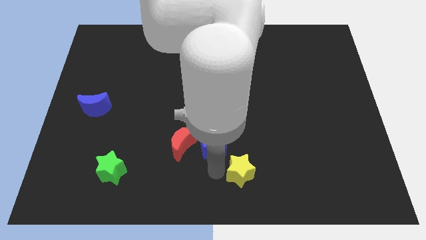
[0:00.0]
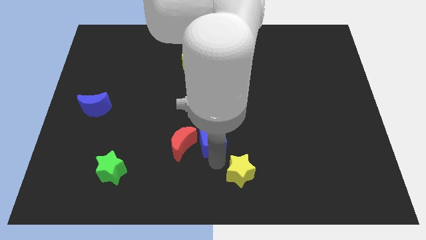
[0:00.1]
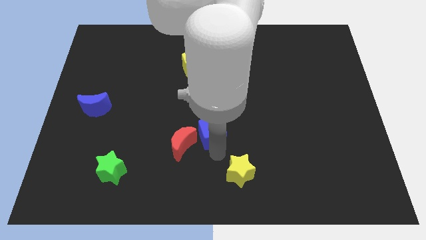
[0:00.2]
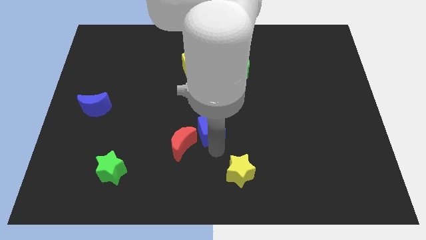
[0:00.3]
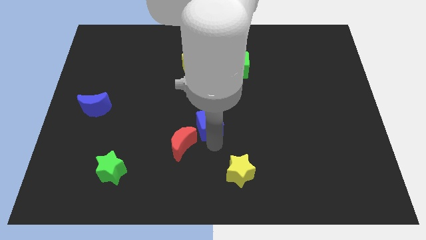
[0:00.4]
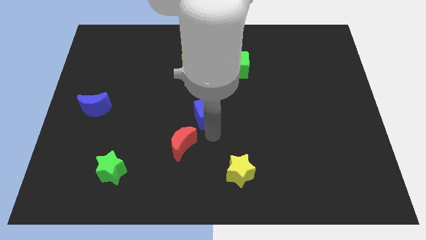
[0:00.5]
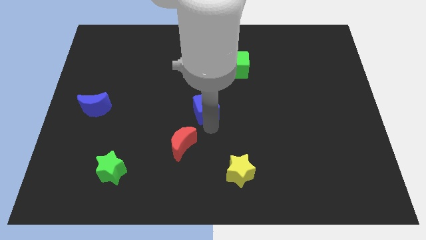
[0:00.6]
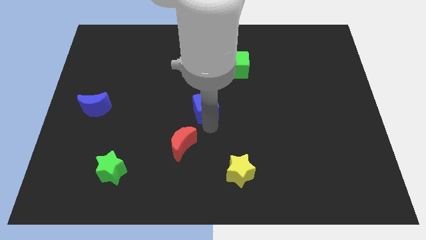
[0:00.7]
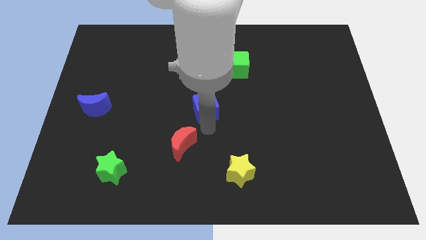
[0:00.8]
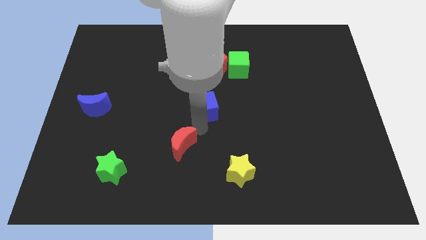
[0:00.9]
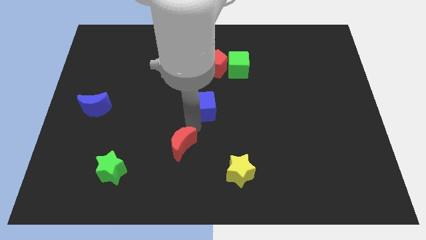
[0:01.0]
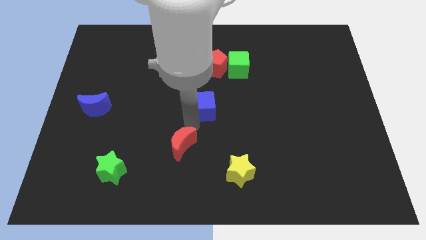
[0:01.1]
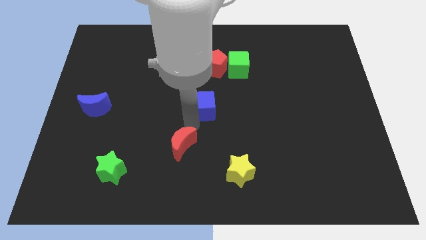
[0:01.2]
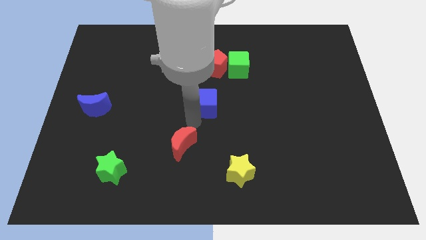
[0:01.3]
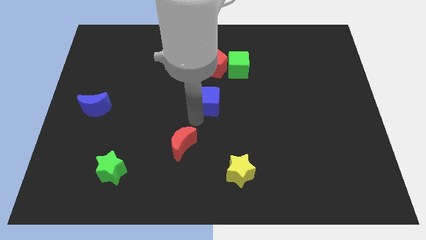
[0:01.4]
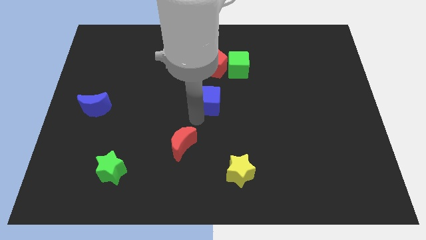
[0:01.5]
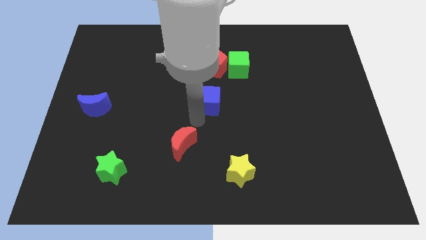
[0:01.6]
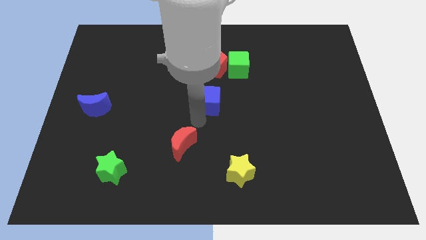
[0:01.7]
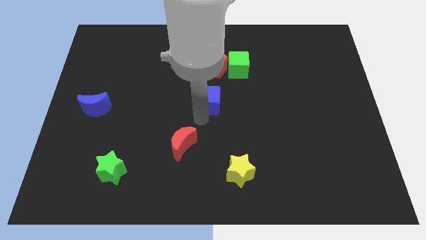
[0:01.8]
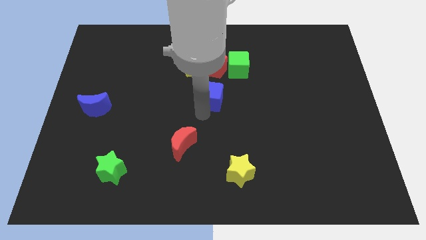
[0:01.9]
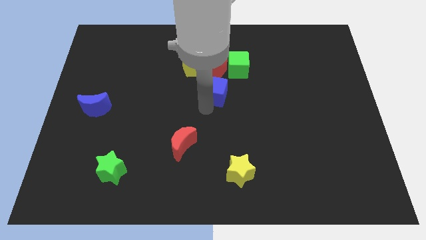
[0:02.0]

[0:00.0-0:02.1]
put the blue cube diagonally in between the green cube and red crescent

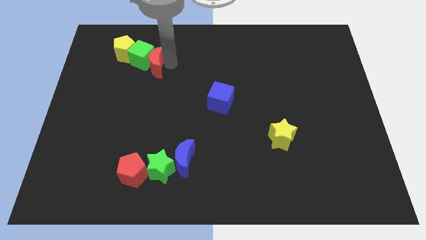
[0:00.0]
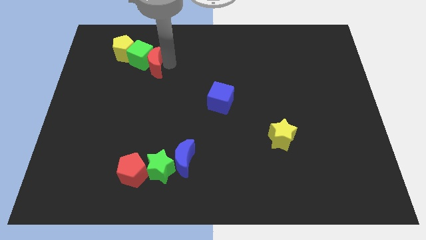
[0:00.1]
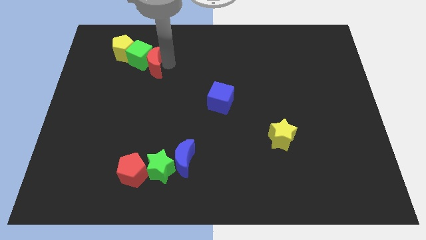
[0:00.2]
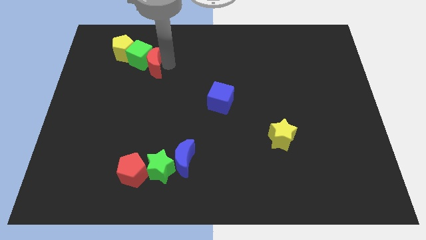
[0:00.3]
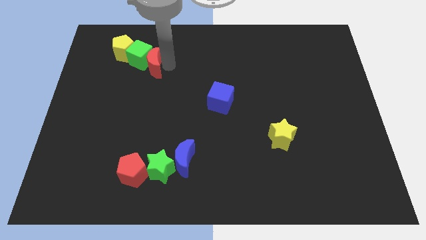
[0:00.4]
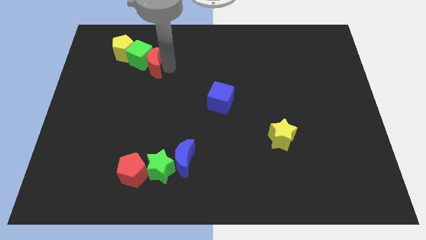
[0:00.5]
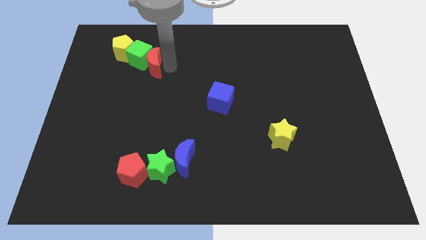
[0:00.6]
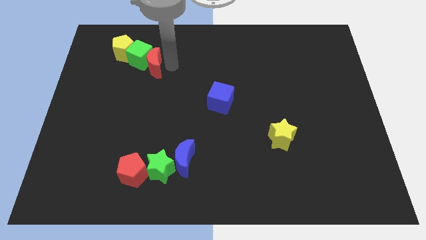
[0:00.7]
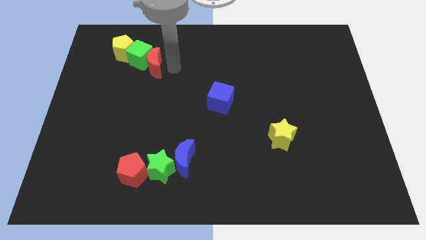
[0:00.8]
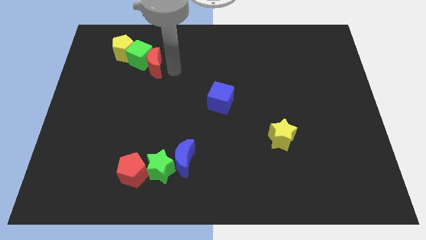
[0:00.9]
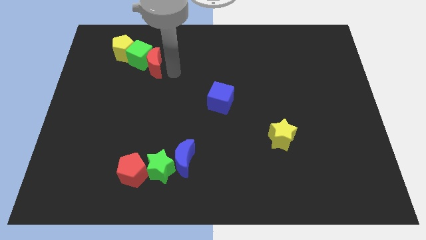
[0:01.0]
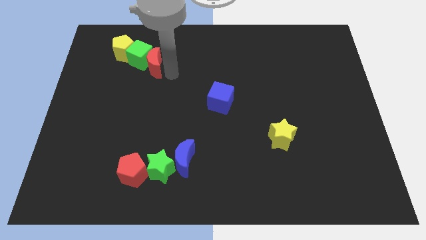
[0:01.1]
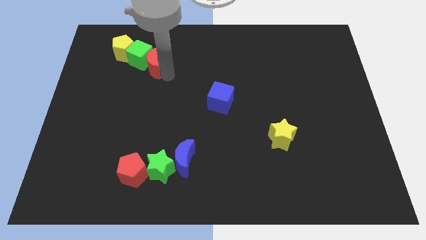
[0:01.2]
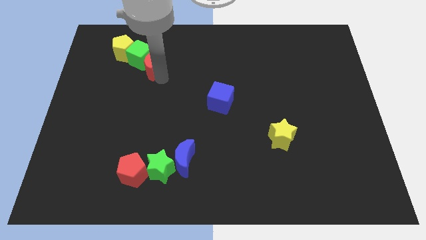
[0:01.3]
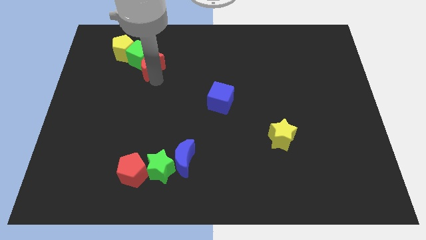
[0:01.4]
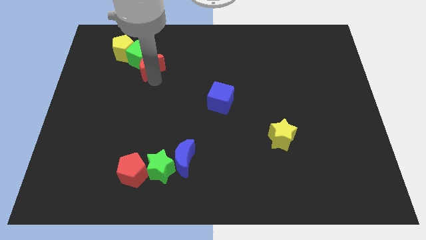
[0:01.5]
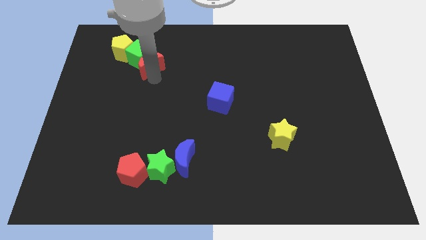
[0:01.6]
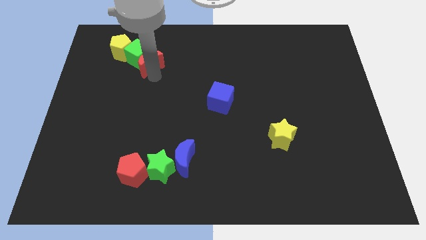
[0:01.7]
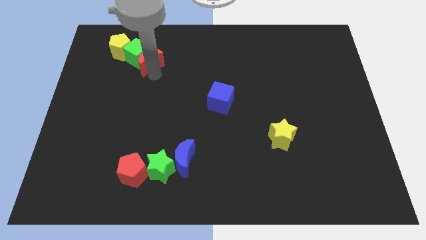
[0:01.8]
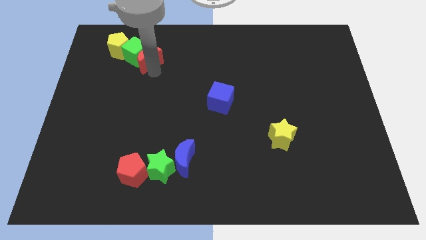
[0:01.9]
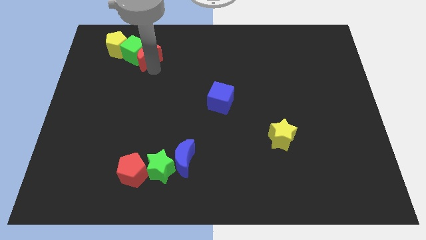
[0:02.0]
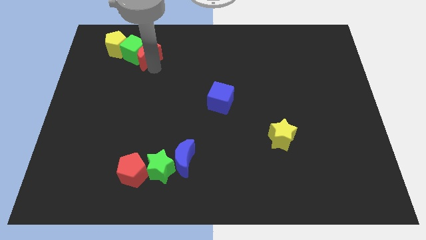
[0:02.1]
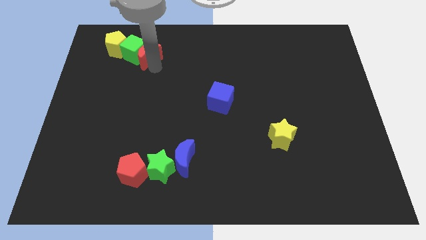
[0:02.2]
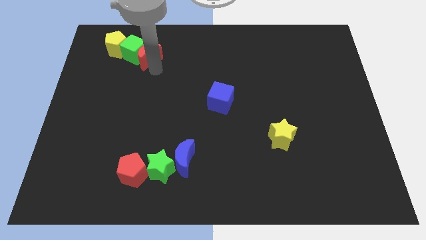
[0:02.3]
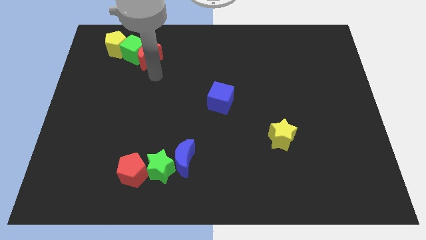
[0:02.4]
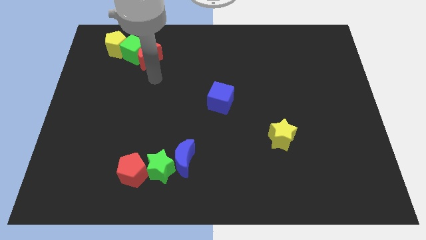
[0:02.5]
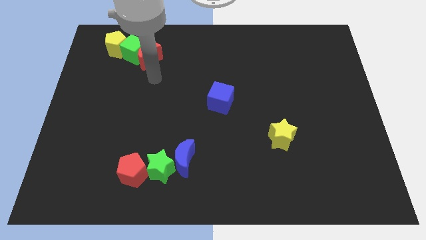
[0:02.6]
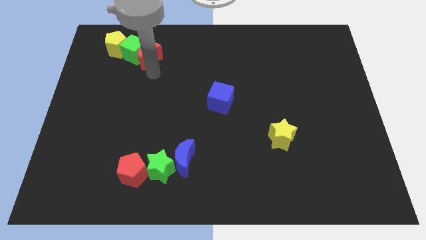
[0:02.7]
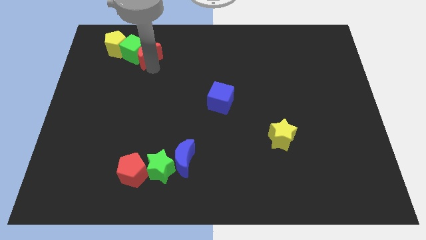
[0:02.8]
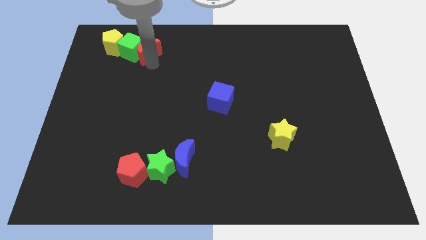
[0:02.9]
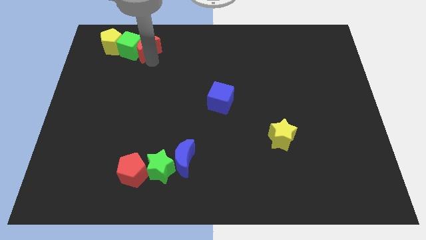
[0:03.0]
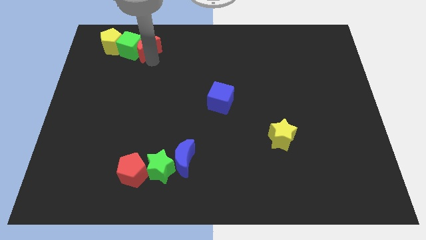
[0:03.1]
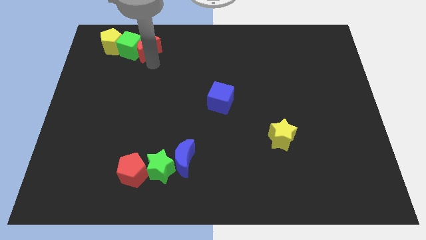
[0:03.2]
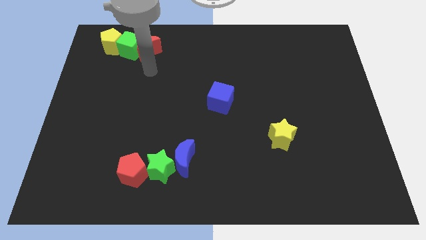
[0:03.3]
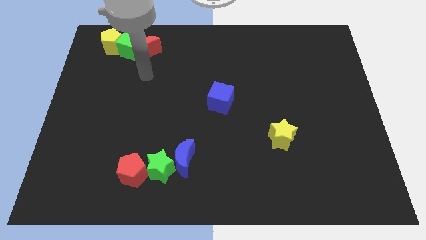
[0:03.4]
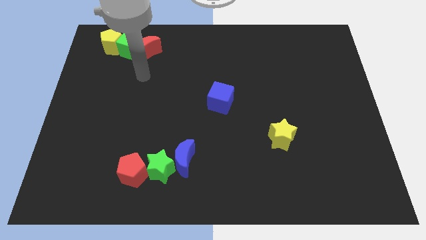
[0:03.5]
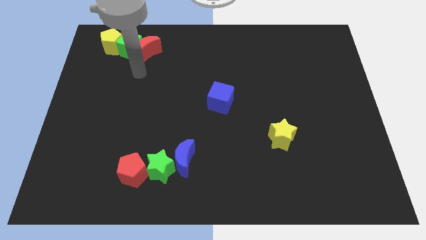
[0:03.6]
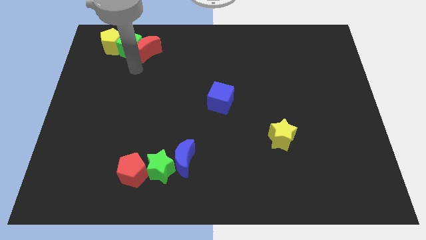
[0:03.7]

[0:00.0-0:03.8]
push the red crescent to the top left corner of the board

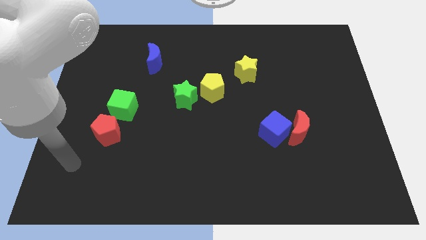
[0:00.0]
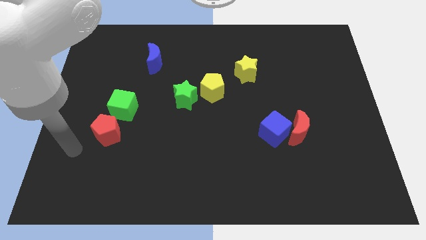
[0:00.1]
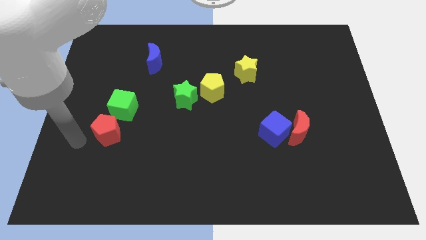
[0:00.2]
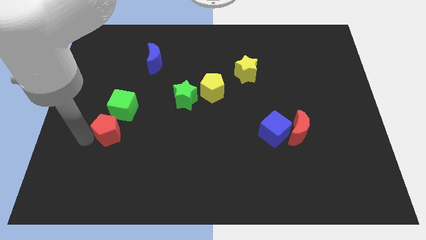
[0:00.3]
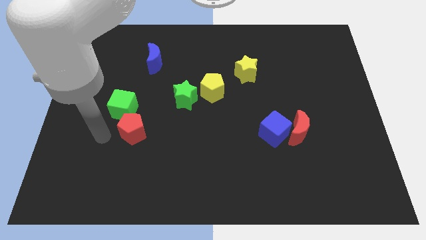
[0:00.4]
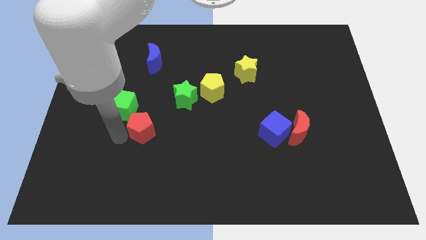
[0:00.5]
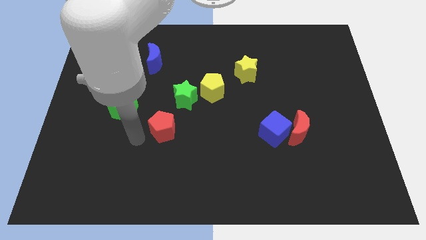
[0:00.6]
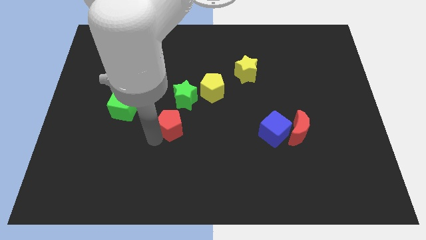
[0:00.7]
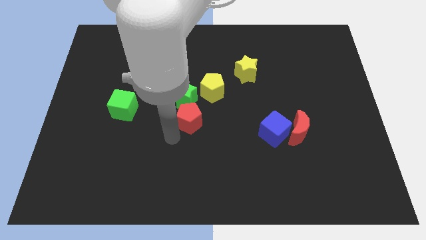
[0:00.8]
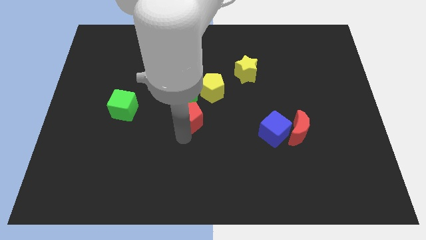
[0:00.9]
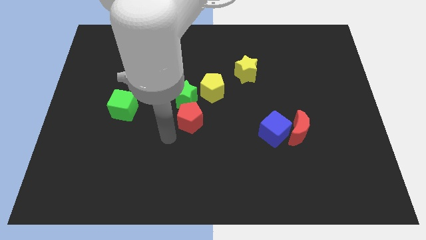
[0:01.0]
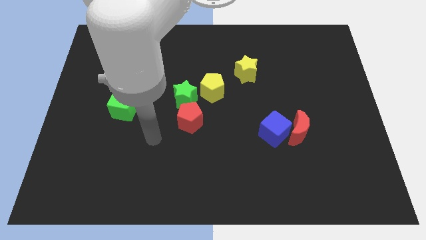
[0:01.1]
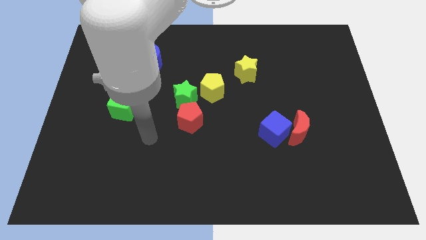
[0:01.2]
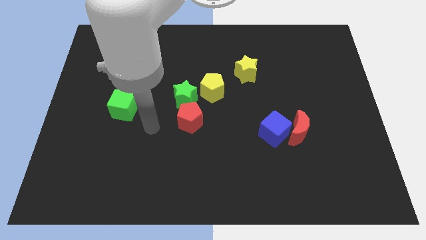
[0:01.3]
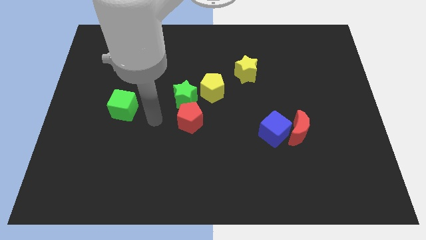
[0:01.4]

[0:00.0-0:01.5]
place red pentagon below green star

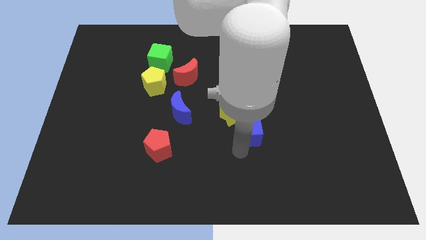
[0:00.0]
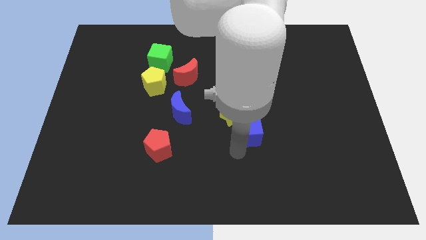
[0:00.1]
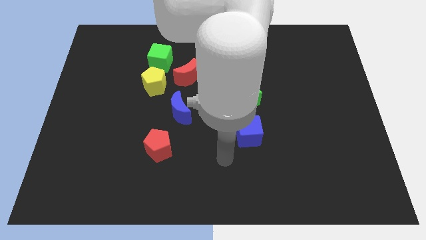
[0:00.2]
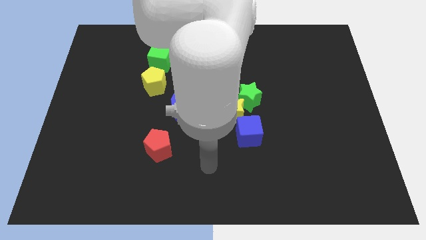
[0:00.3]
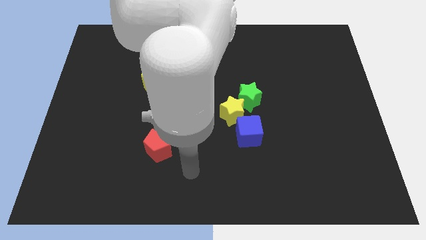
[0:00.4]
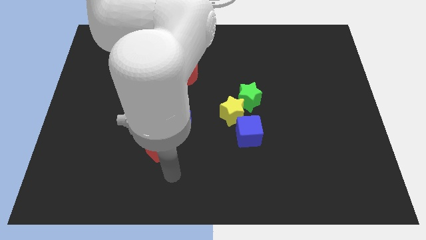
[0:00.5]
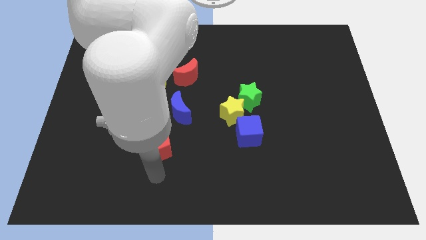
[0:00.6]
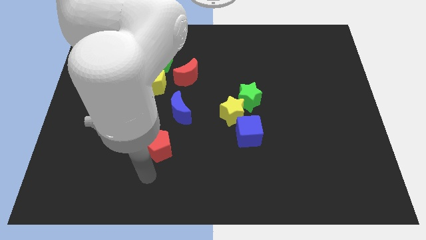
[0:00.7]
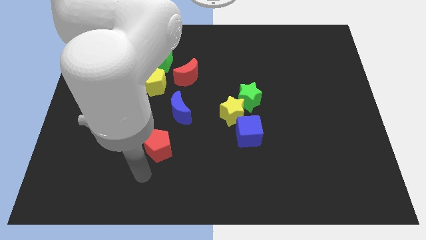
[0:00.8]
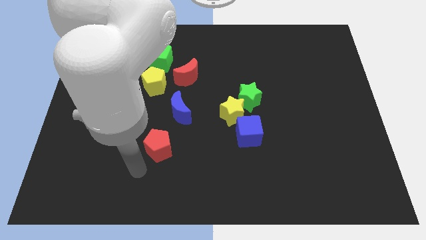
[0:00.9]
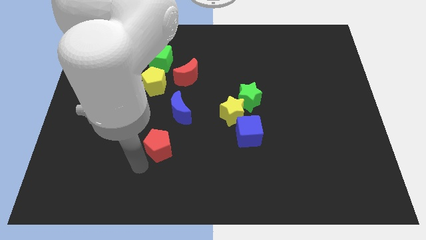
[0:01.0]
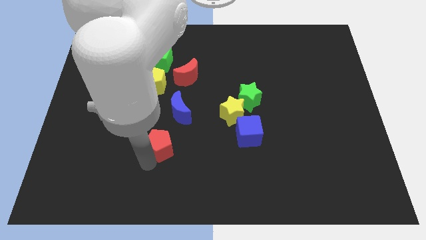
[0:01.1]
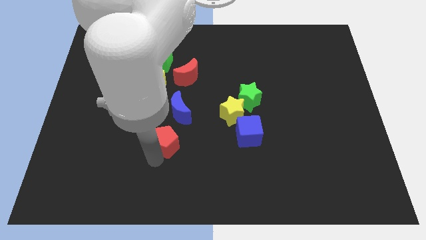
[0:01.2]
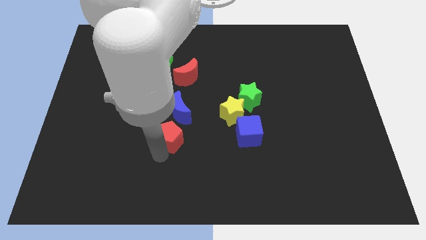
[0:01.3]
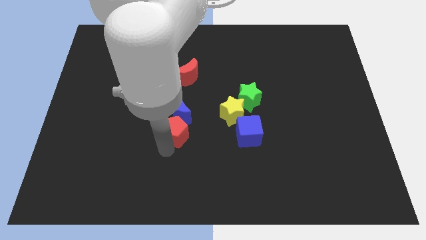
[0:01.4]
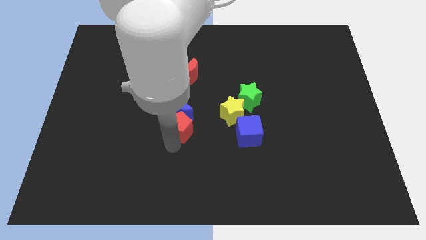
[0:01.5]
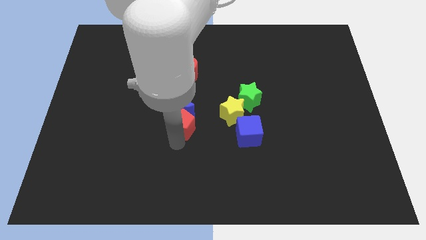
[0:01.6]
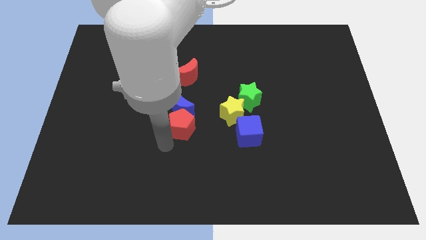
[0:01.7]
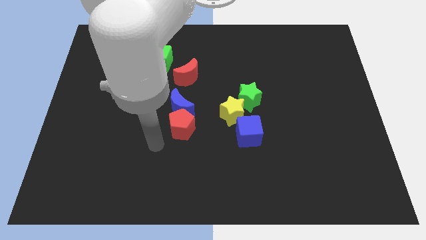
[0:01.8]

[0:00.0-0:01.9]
push the red pentagon into the blue crescent from the bottom
